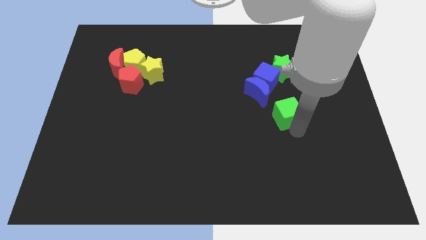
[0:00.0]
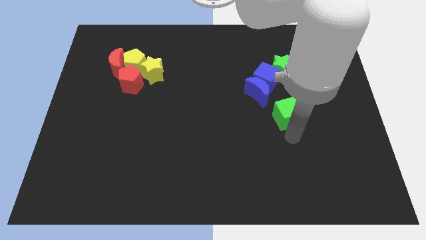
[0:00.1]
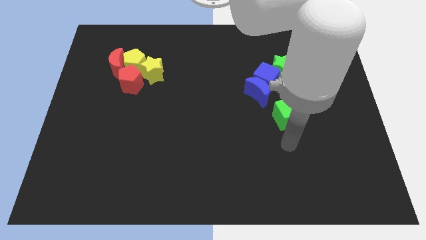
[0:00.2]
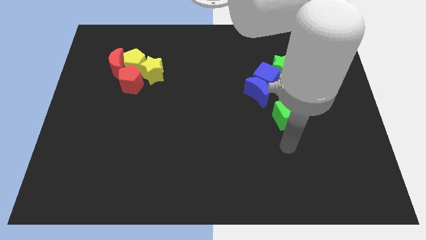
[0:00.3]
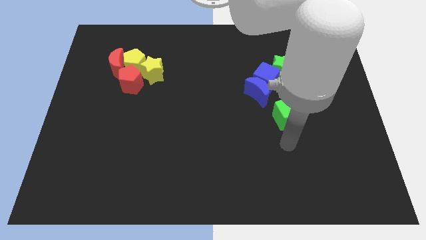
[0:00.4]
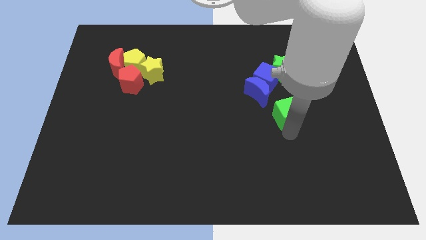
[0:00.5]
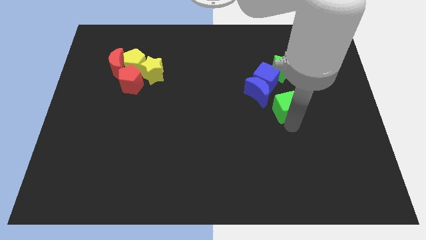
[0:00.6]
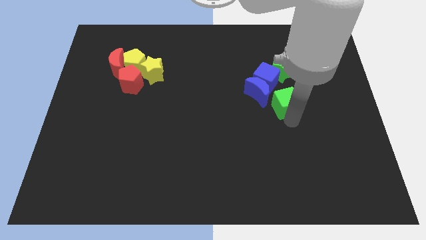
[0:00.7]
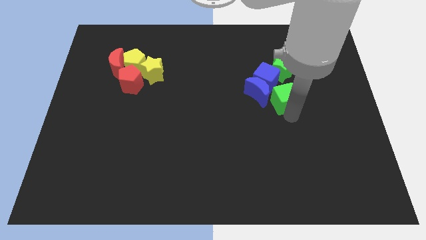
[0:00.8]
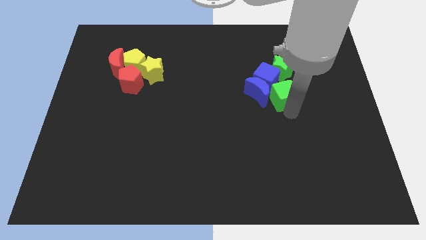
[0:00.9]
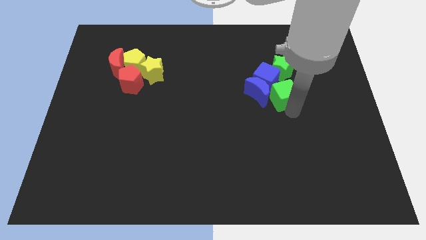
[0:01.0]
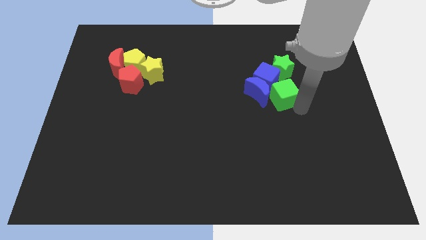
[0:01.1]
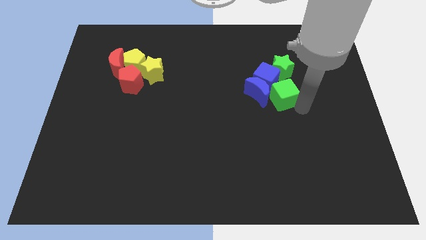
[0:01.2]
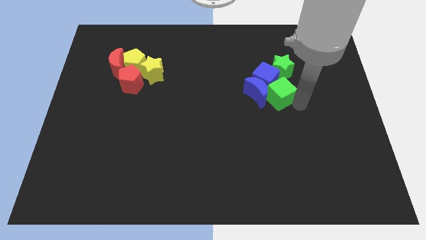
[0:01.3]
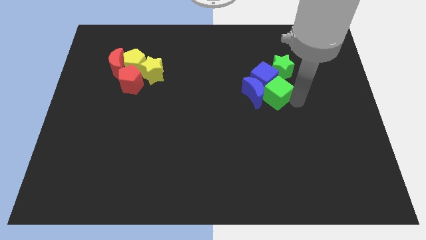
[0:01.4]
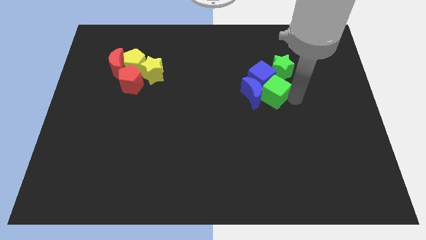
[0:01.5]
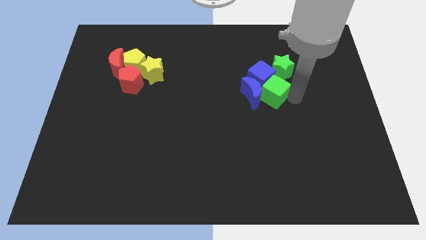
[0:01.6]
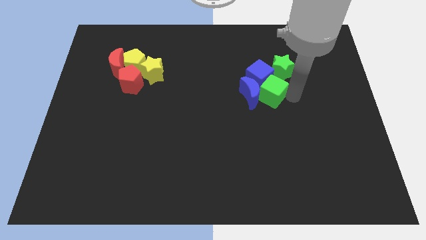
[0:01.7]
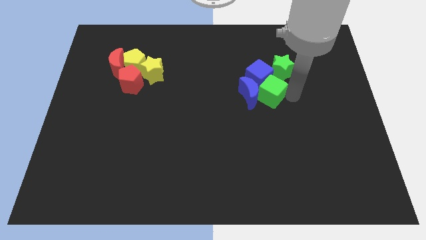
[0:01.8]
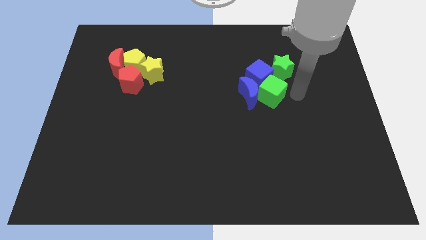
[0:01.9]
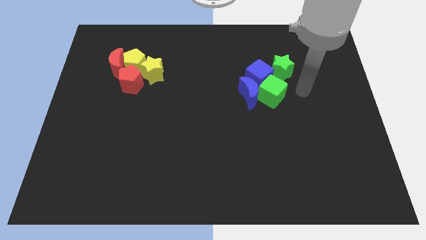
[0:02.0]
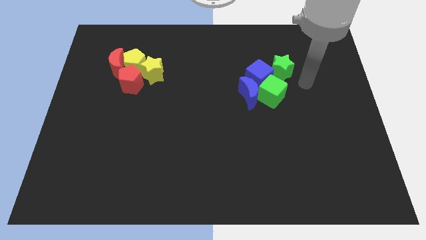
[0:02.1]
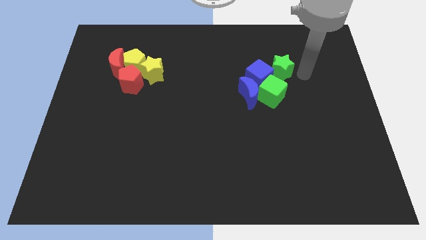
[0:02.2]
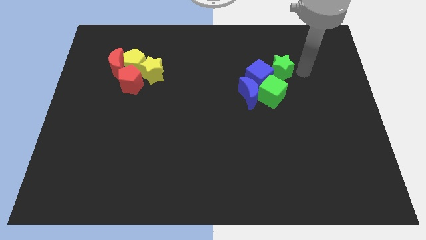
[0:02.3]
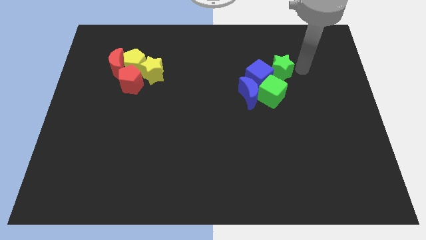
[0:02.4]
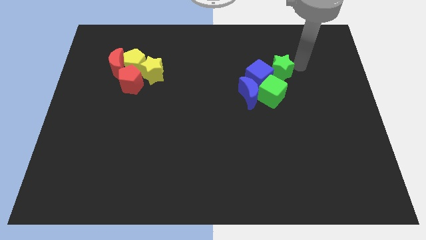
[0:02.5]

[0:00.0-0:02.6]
push the green cube to the blue crescent and blue cube

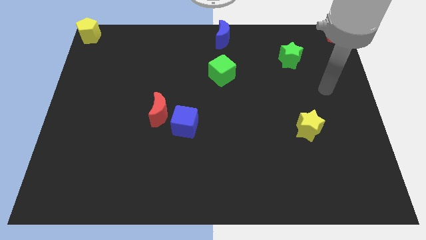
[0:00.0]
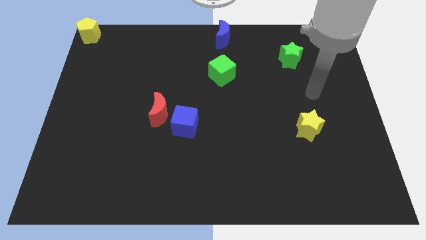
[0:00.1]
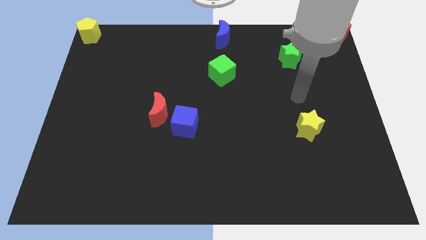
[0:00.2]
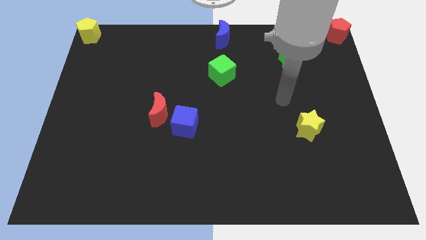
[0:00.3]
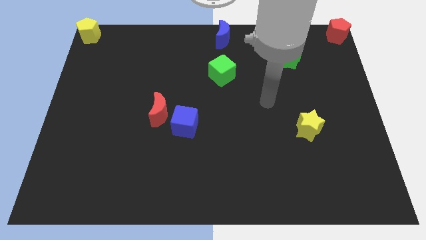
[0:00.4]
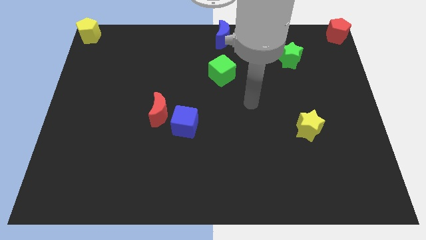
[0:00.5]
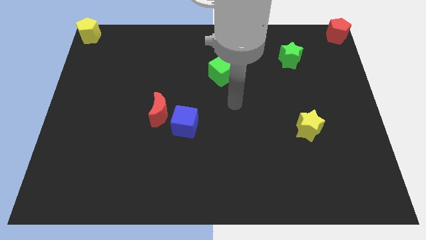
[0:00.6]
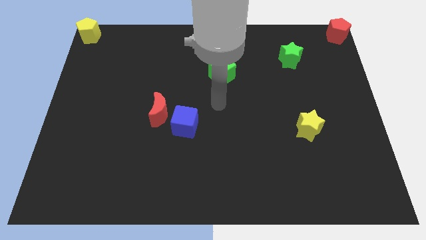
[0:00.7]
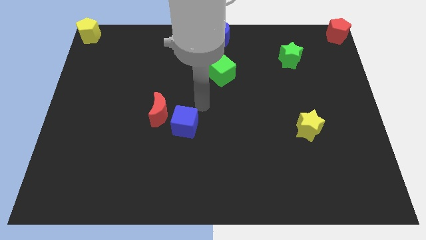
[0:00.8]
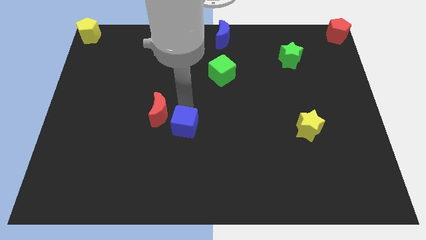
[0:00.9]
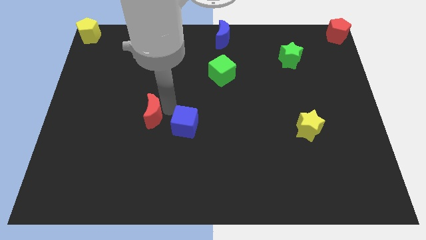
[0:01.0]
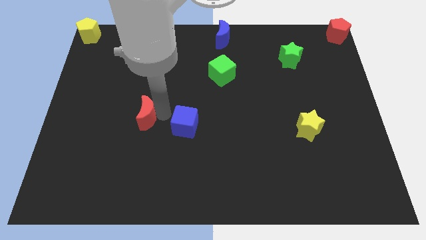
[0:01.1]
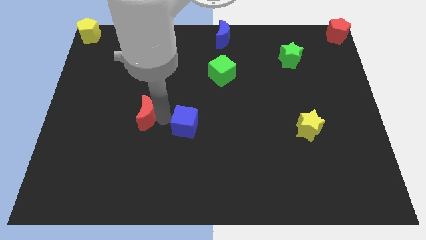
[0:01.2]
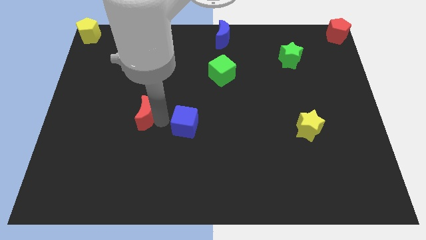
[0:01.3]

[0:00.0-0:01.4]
place your arm in between the red crescent and blue cube

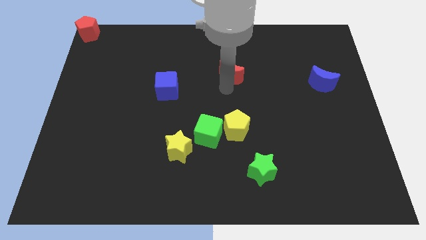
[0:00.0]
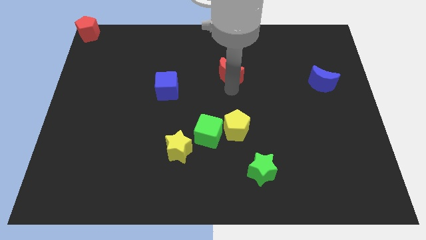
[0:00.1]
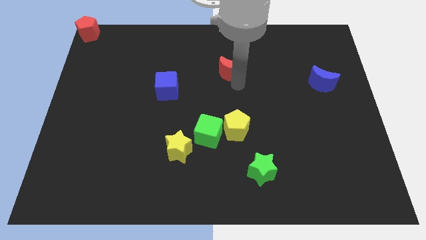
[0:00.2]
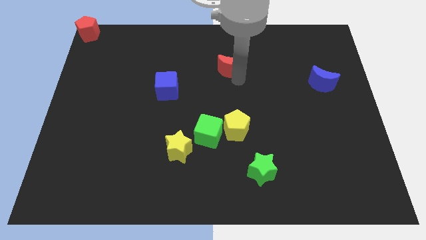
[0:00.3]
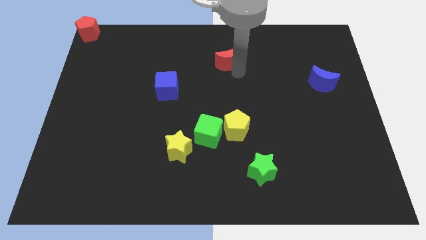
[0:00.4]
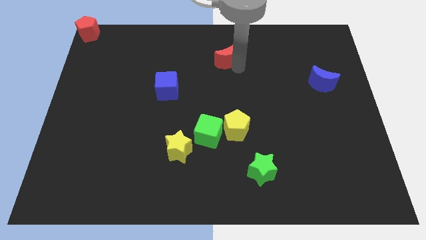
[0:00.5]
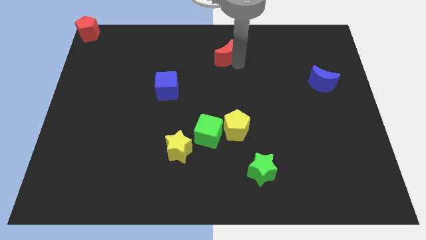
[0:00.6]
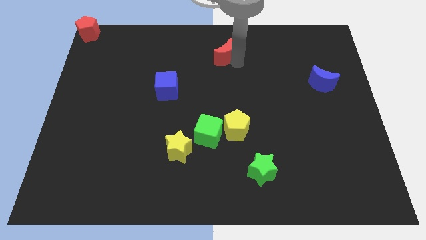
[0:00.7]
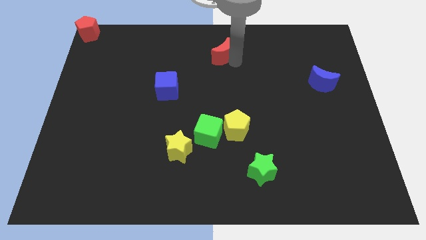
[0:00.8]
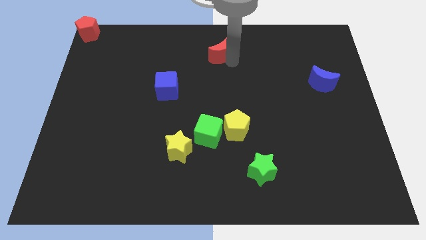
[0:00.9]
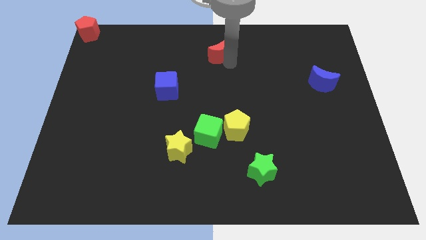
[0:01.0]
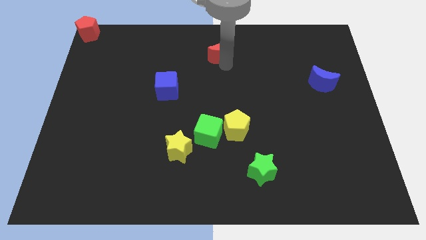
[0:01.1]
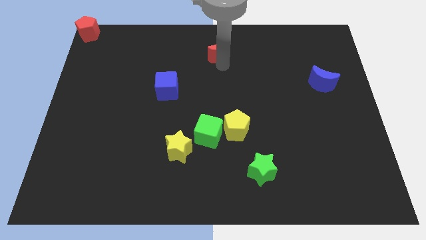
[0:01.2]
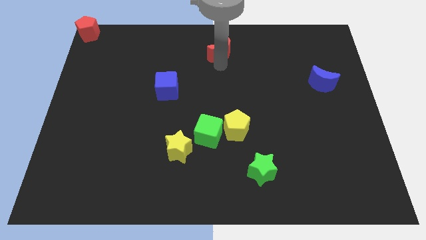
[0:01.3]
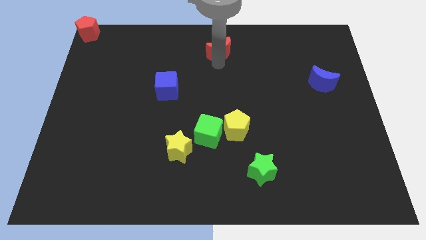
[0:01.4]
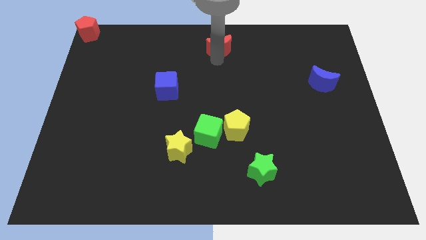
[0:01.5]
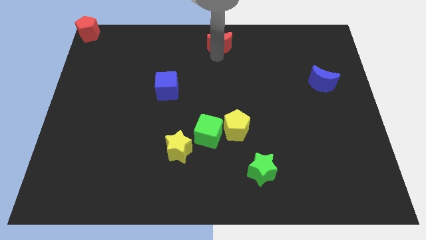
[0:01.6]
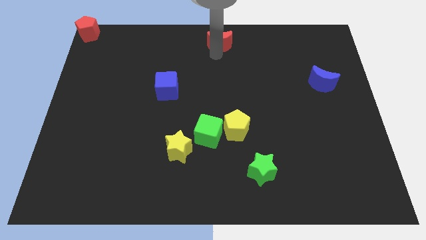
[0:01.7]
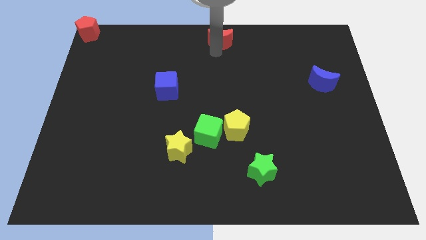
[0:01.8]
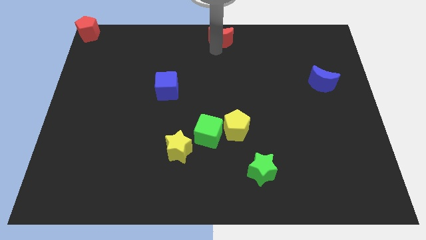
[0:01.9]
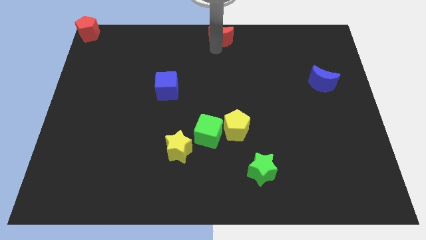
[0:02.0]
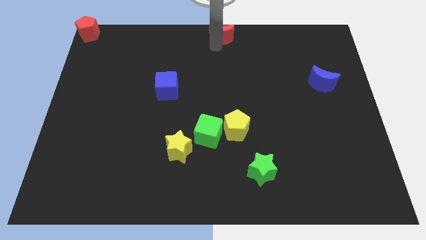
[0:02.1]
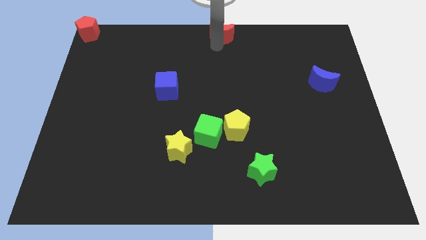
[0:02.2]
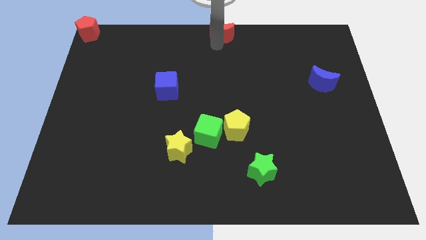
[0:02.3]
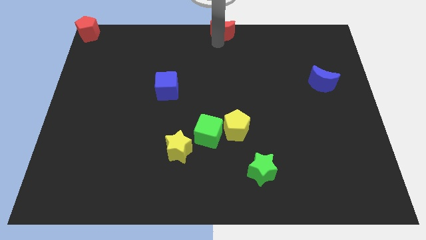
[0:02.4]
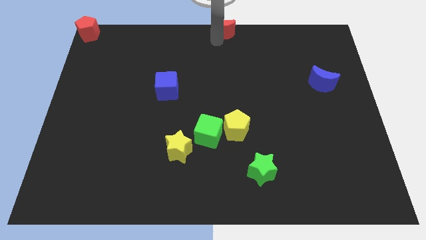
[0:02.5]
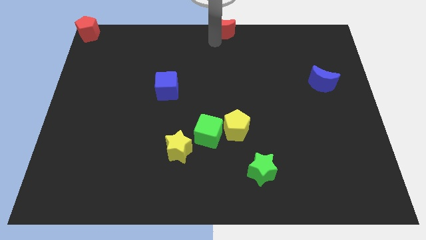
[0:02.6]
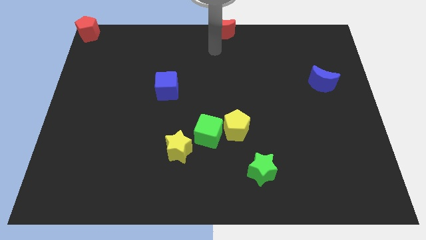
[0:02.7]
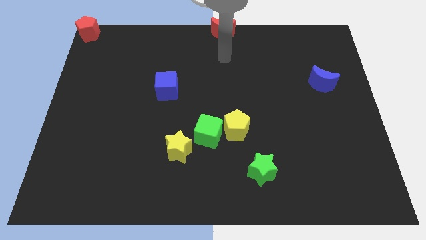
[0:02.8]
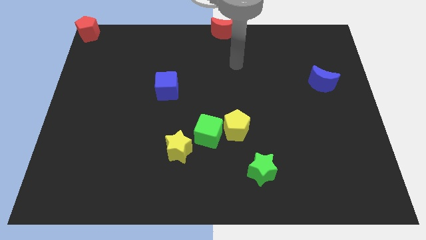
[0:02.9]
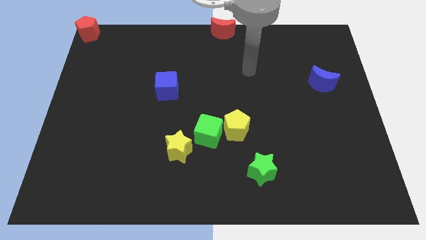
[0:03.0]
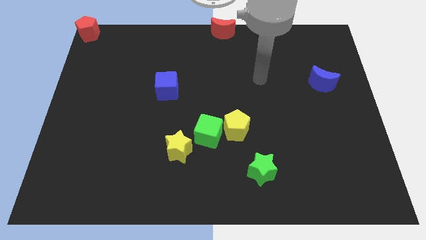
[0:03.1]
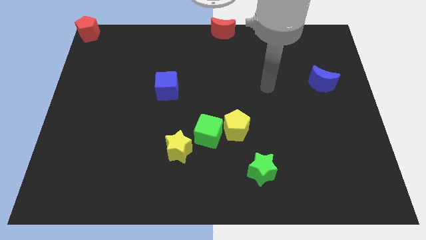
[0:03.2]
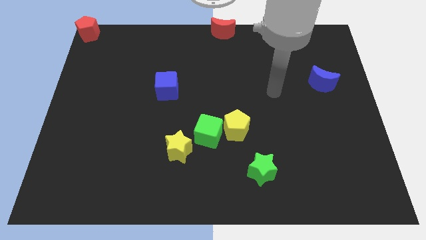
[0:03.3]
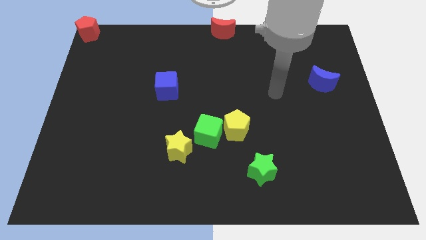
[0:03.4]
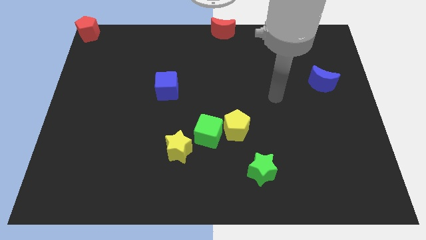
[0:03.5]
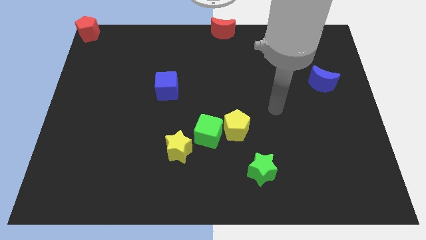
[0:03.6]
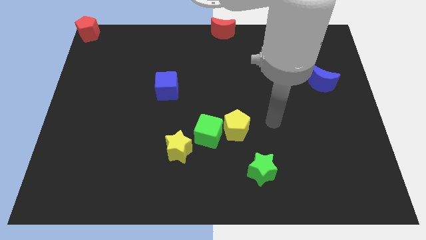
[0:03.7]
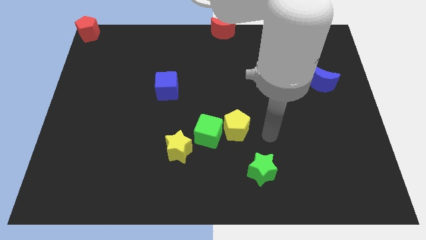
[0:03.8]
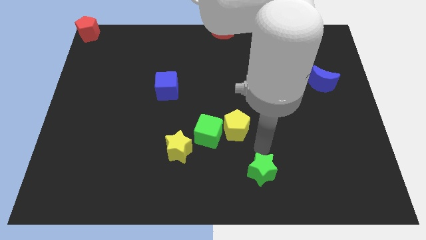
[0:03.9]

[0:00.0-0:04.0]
move red crescent to the top center

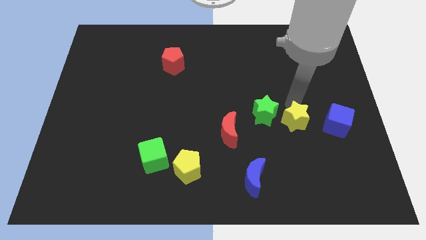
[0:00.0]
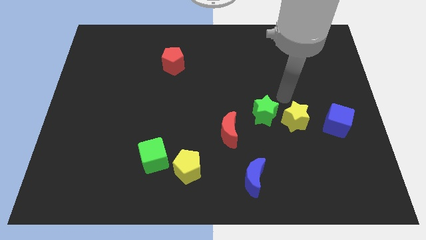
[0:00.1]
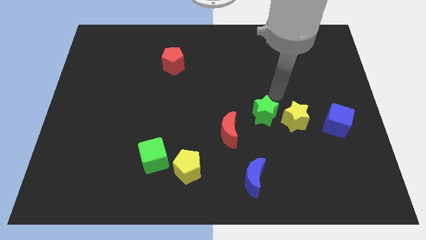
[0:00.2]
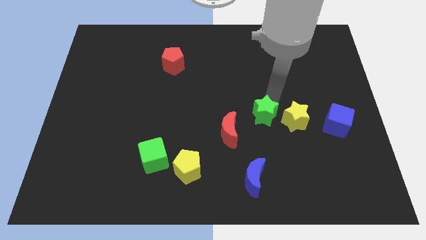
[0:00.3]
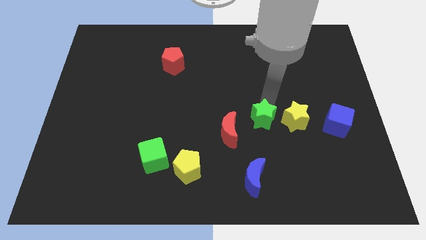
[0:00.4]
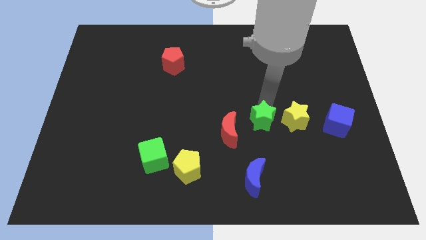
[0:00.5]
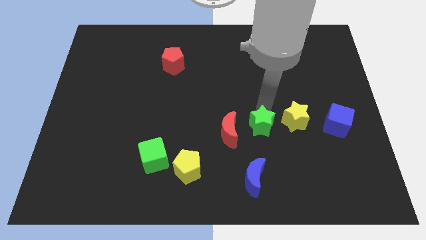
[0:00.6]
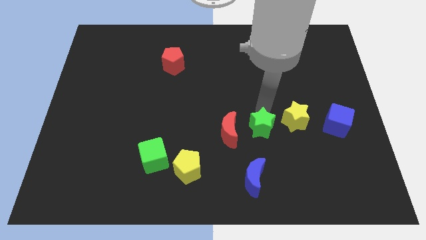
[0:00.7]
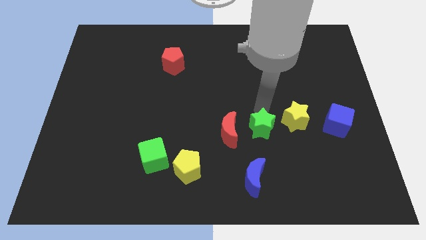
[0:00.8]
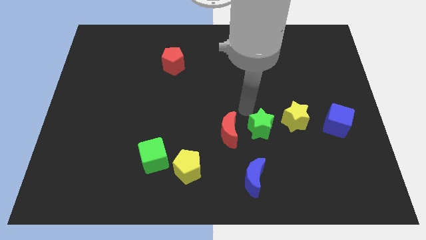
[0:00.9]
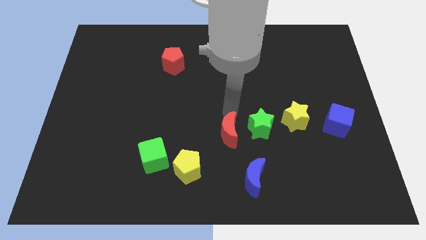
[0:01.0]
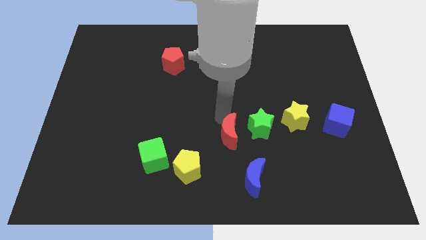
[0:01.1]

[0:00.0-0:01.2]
push the green star slightly to the bottom
